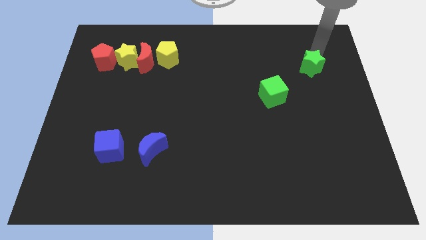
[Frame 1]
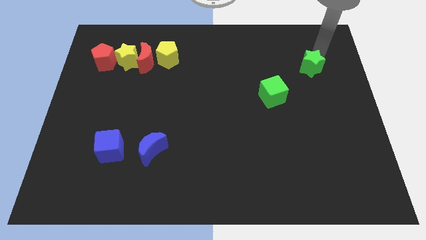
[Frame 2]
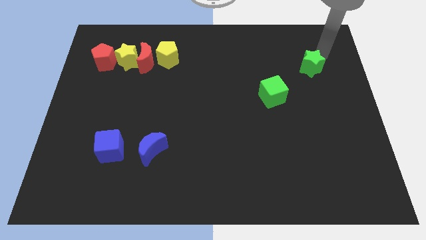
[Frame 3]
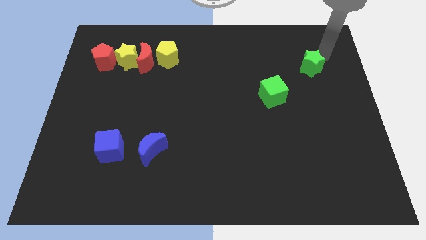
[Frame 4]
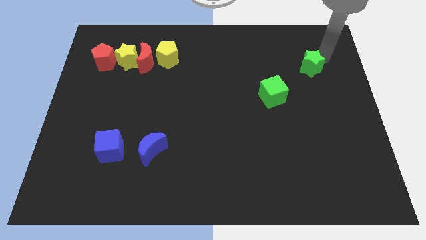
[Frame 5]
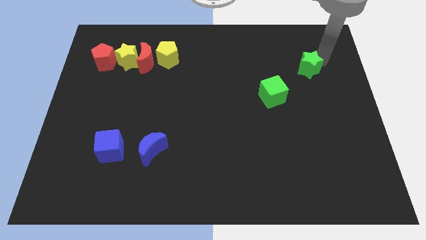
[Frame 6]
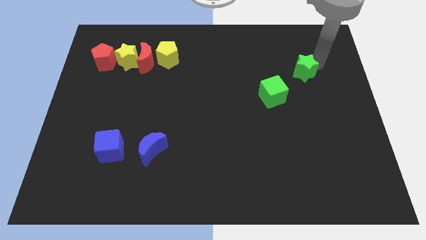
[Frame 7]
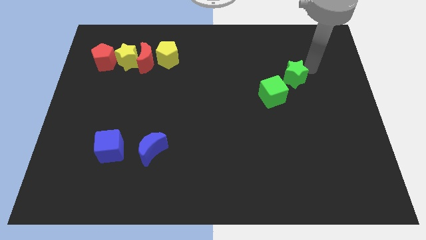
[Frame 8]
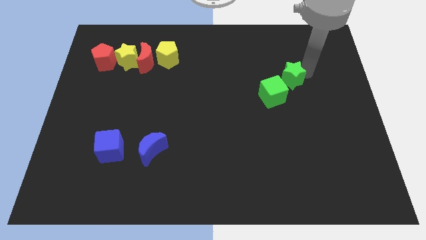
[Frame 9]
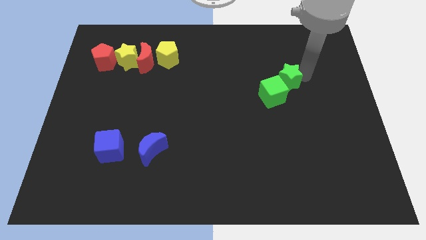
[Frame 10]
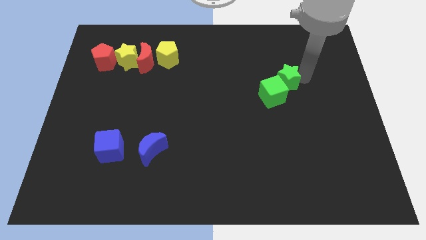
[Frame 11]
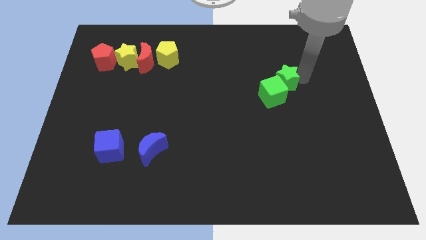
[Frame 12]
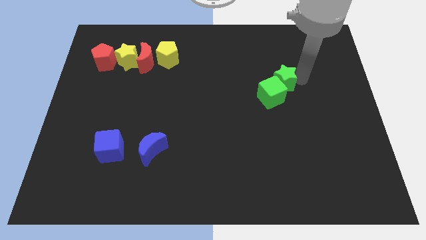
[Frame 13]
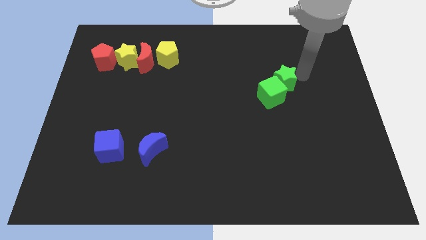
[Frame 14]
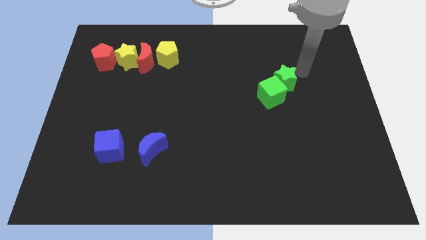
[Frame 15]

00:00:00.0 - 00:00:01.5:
attach the green star and the green cube

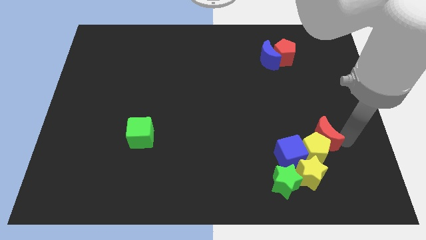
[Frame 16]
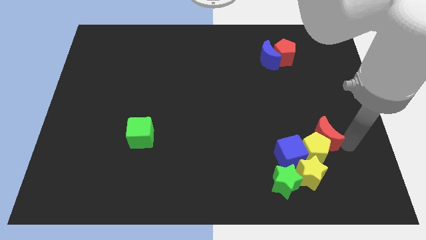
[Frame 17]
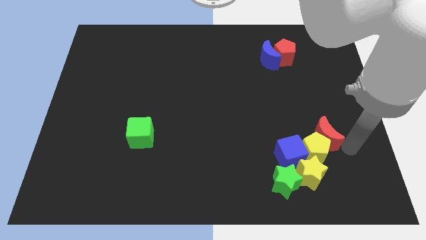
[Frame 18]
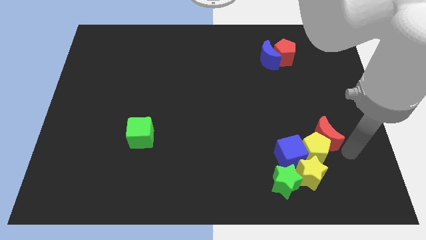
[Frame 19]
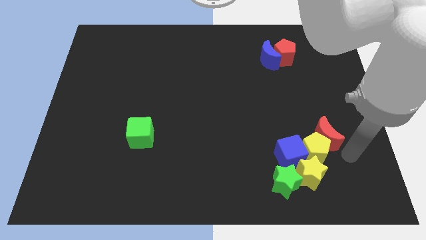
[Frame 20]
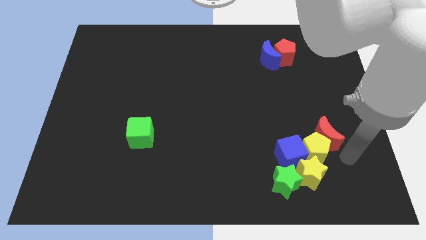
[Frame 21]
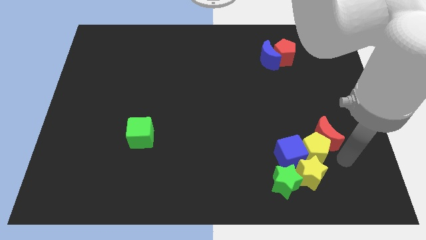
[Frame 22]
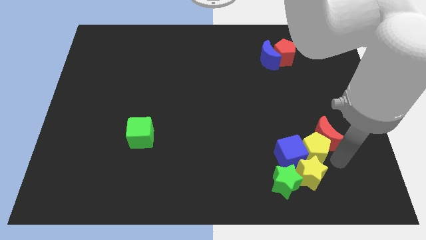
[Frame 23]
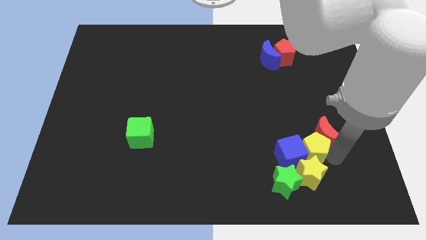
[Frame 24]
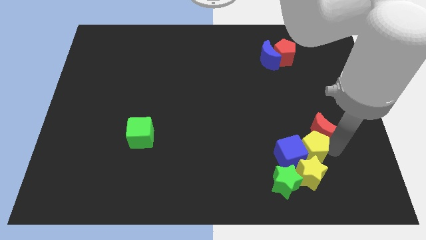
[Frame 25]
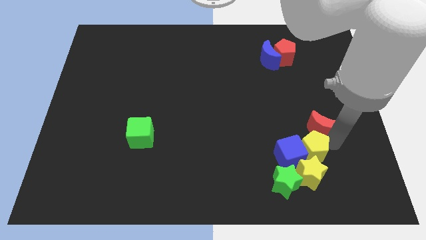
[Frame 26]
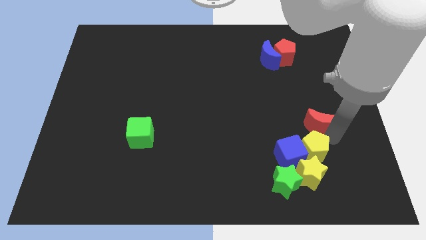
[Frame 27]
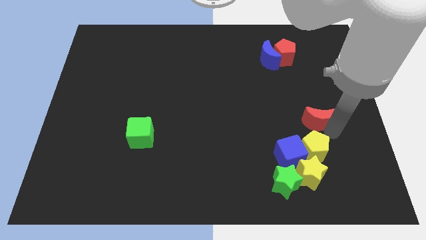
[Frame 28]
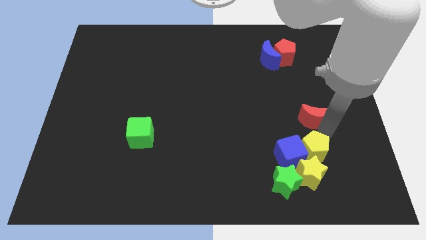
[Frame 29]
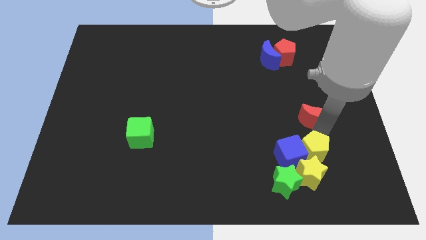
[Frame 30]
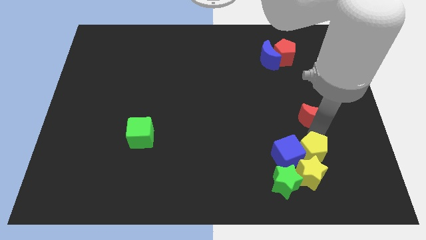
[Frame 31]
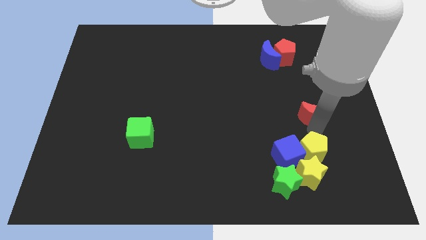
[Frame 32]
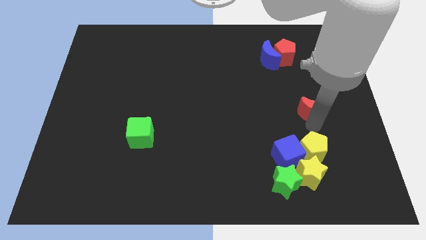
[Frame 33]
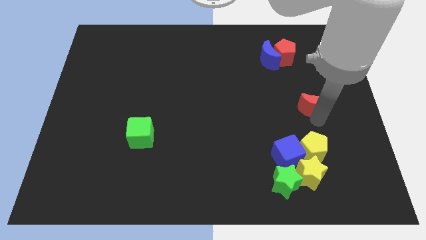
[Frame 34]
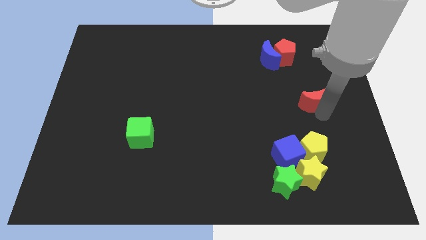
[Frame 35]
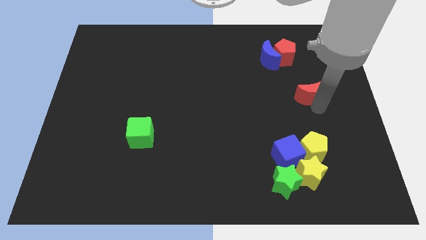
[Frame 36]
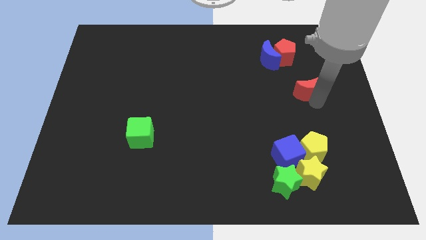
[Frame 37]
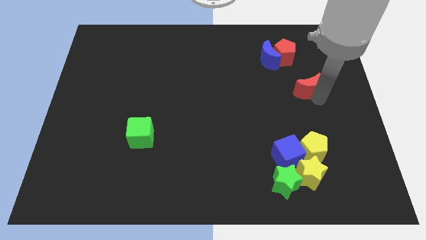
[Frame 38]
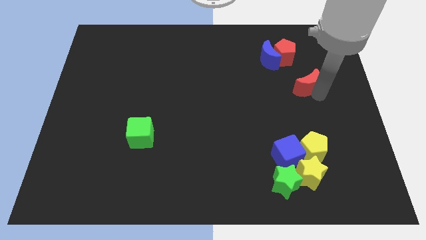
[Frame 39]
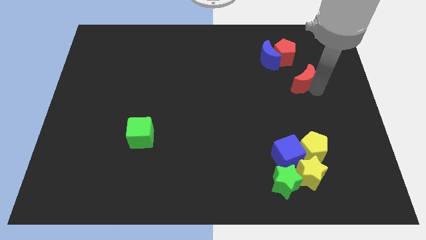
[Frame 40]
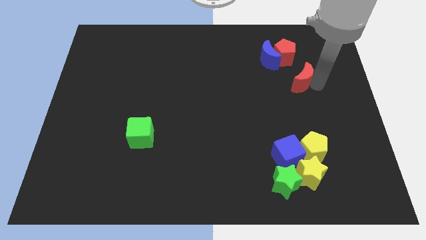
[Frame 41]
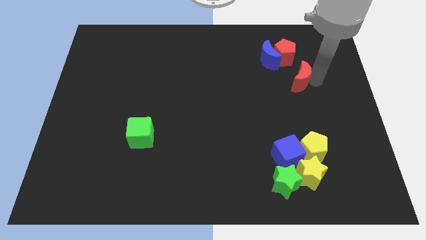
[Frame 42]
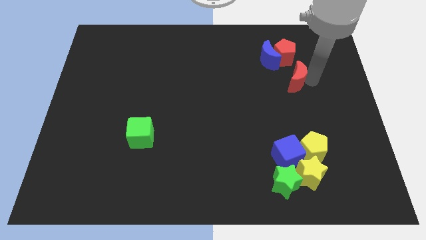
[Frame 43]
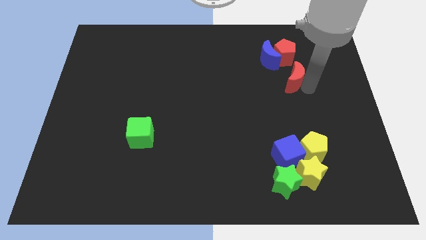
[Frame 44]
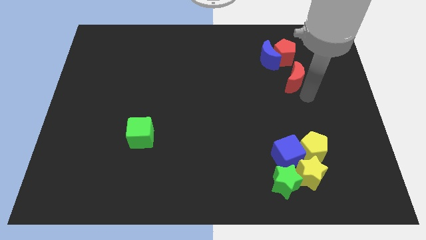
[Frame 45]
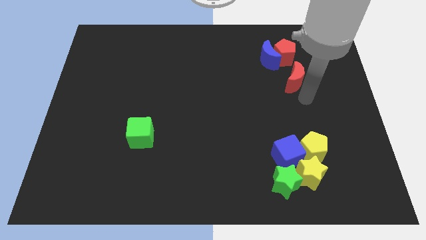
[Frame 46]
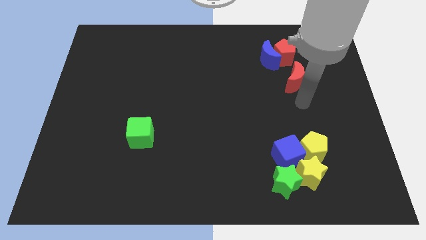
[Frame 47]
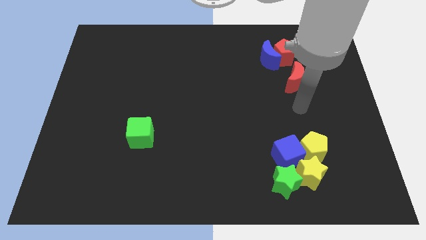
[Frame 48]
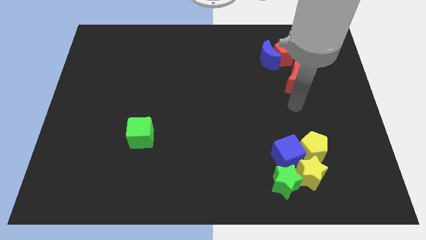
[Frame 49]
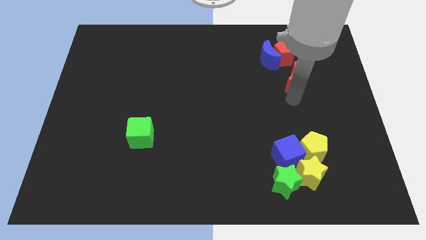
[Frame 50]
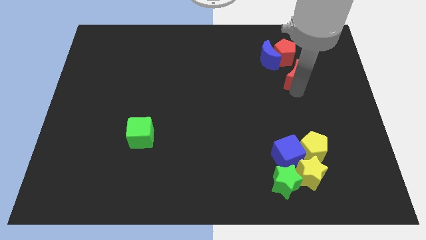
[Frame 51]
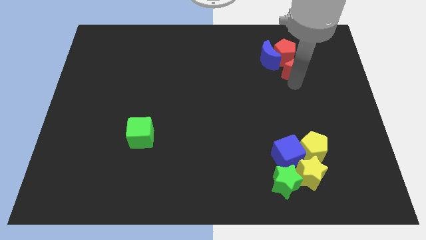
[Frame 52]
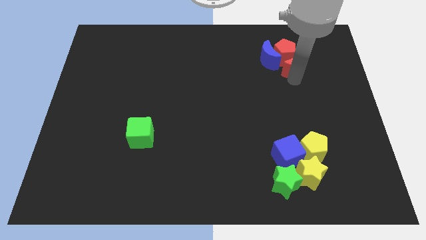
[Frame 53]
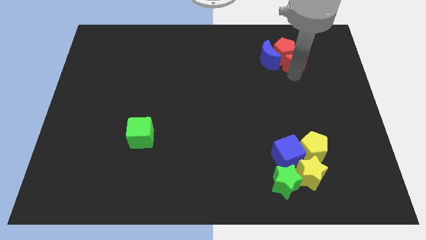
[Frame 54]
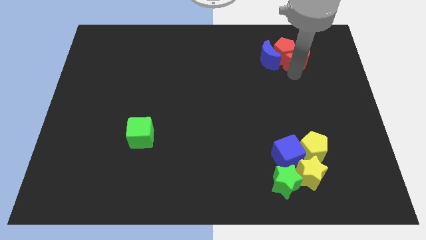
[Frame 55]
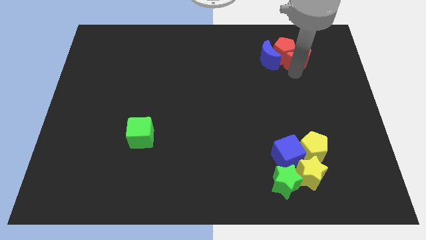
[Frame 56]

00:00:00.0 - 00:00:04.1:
place the red moon below into red pentagon

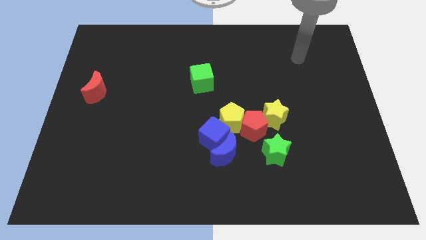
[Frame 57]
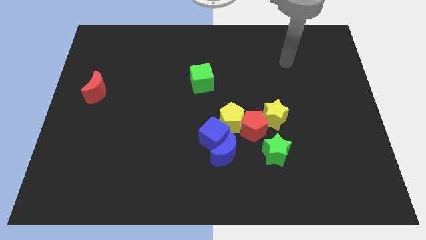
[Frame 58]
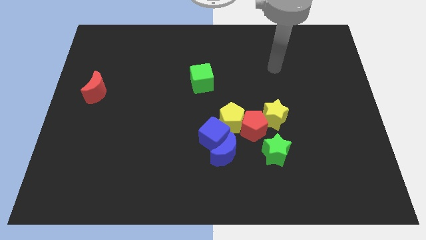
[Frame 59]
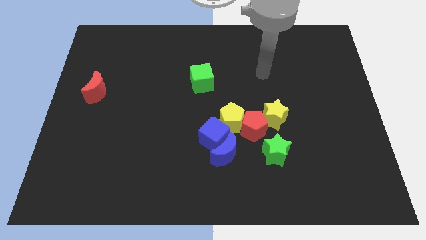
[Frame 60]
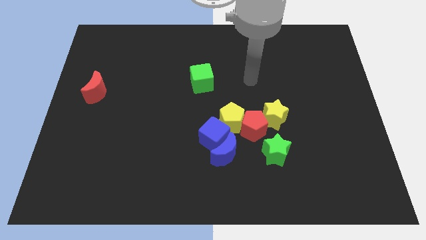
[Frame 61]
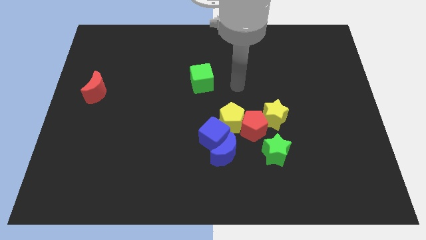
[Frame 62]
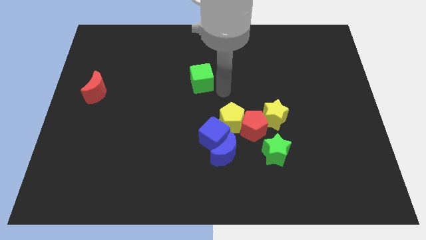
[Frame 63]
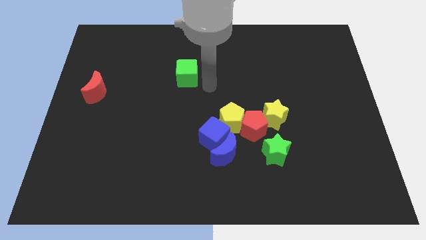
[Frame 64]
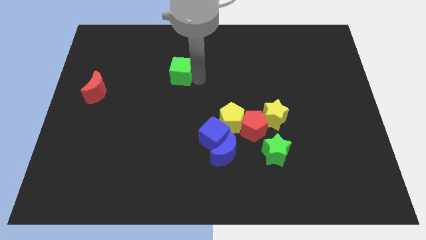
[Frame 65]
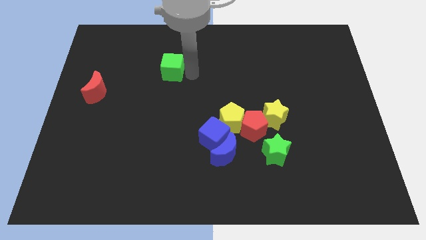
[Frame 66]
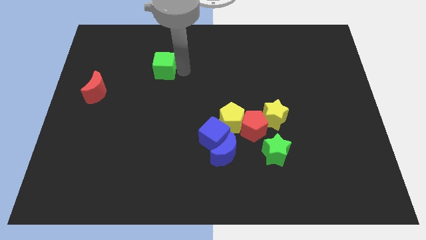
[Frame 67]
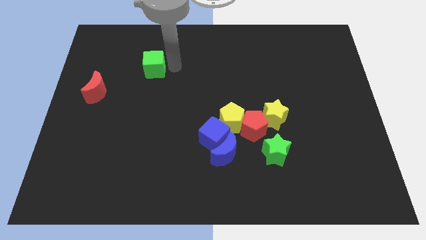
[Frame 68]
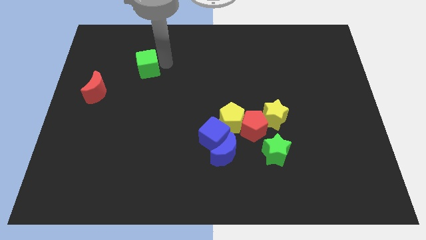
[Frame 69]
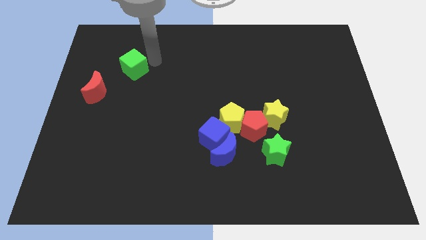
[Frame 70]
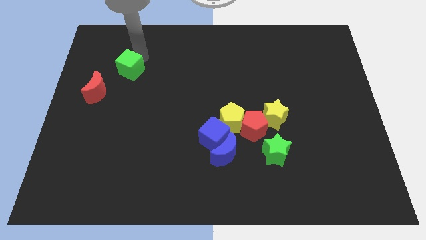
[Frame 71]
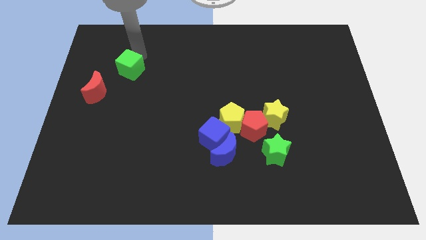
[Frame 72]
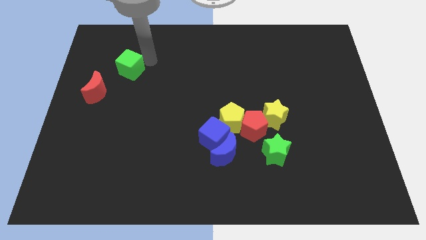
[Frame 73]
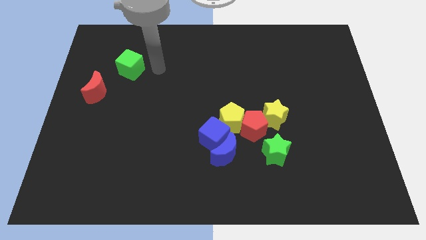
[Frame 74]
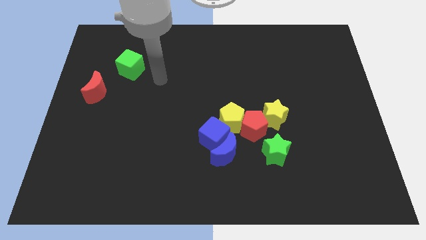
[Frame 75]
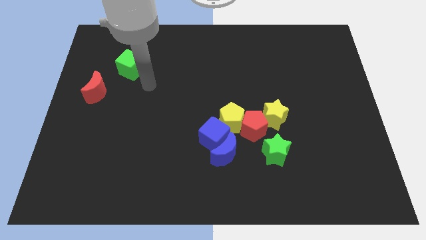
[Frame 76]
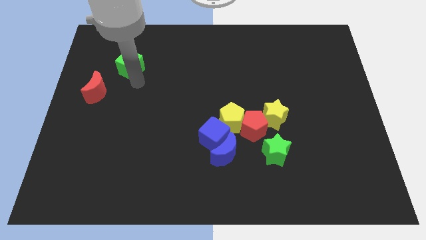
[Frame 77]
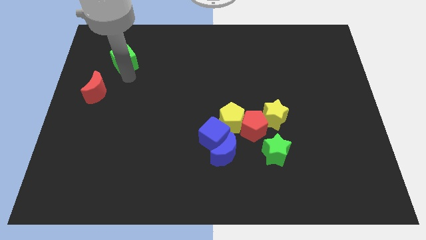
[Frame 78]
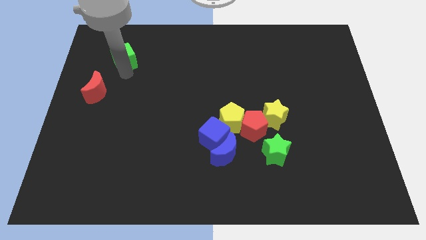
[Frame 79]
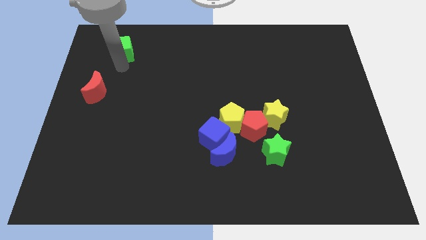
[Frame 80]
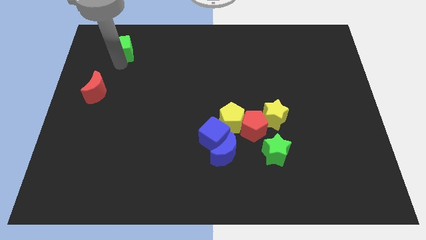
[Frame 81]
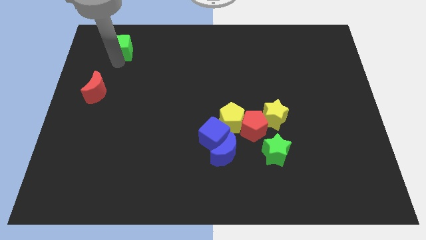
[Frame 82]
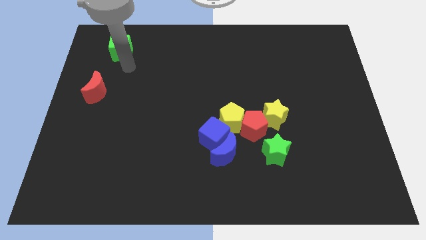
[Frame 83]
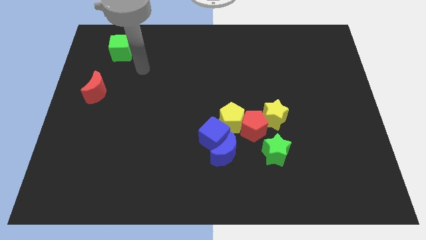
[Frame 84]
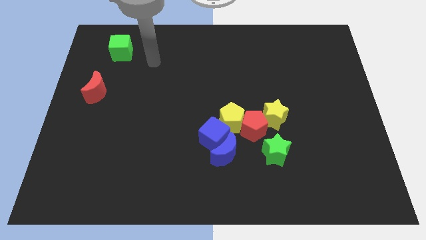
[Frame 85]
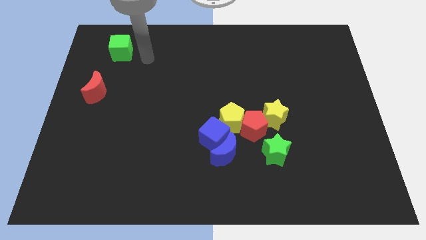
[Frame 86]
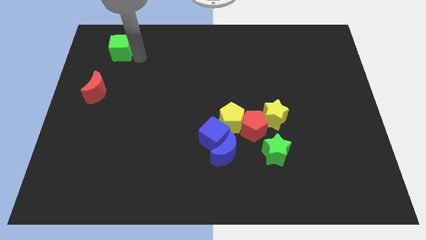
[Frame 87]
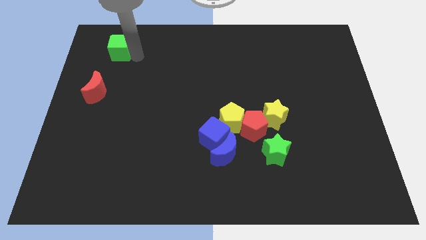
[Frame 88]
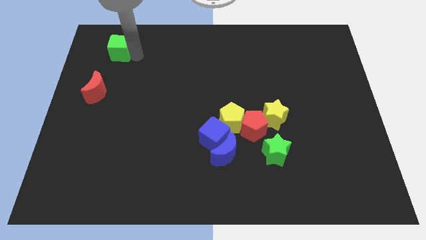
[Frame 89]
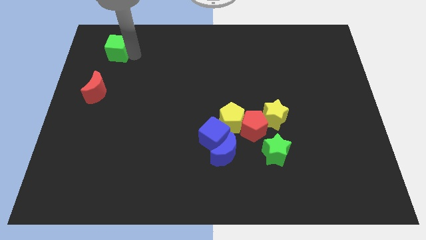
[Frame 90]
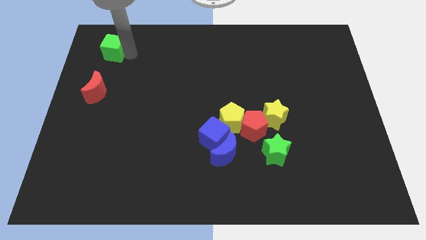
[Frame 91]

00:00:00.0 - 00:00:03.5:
move green cube towards top left of the board
